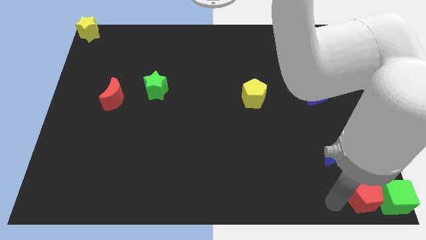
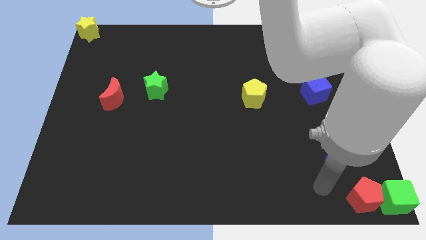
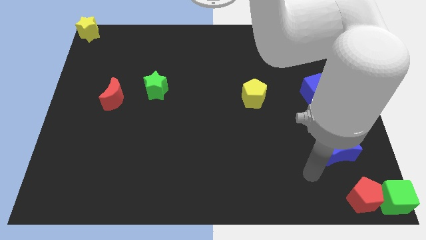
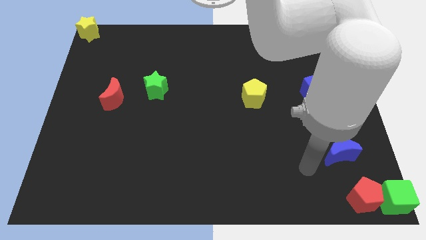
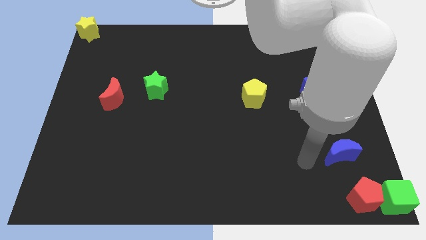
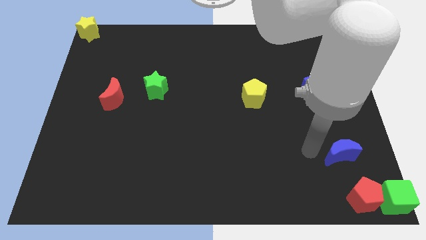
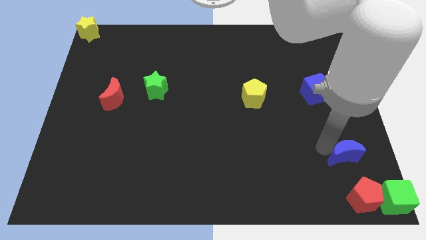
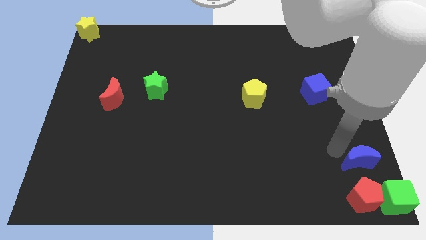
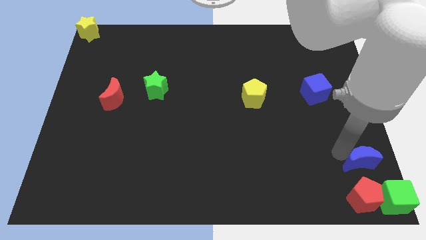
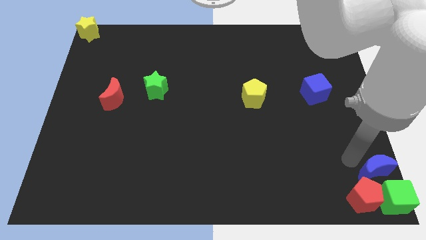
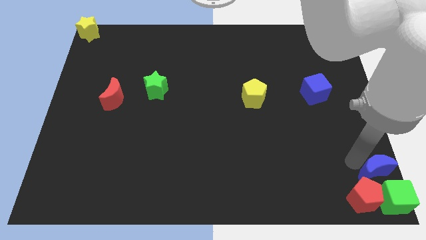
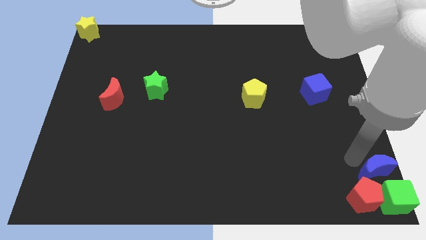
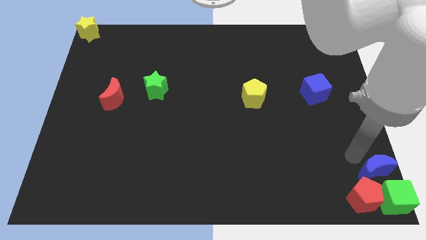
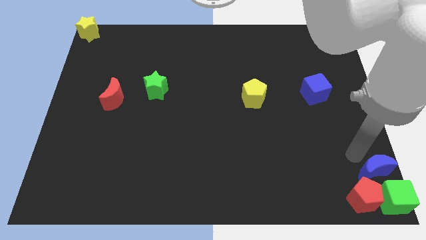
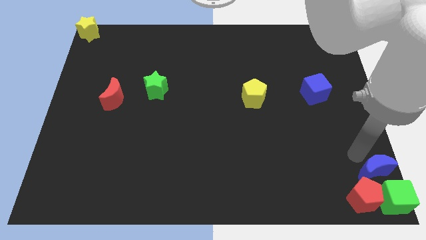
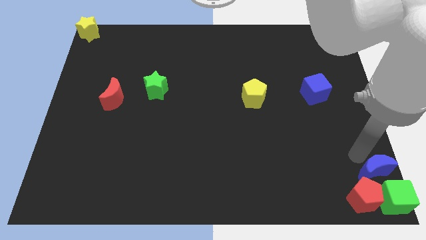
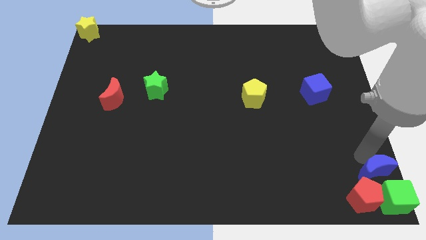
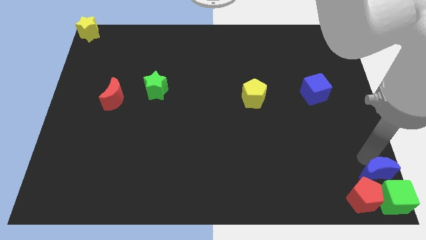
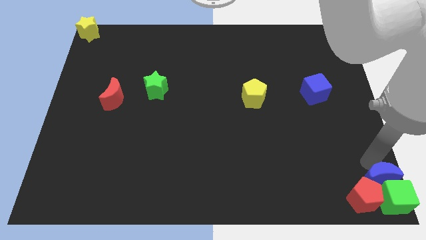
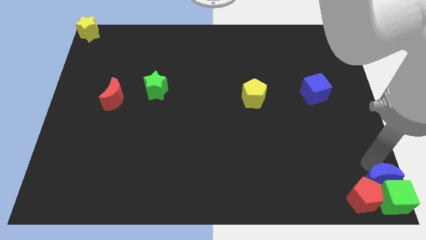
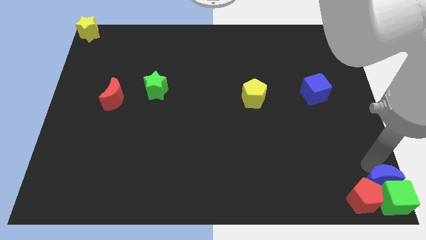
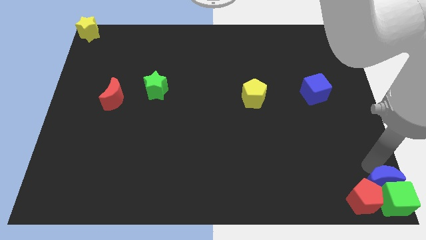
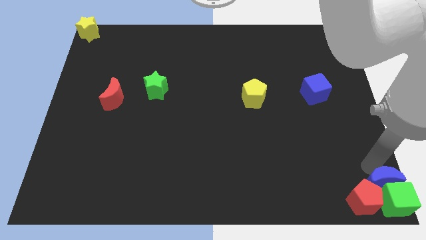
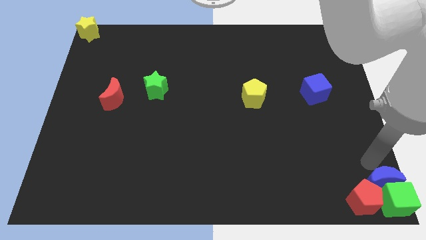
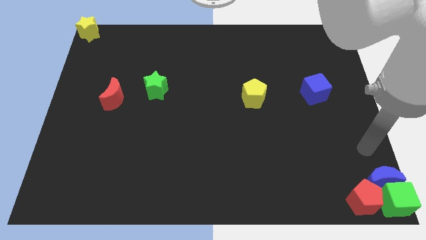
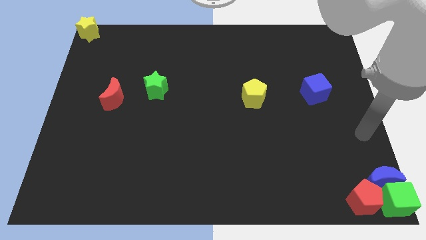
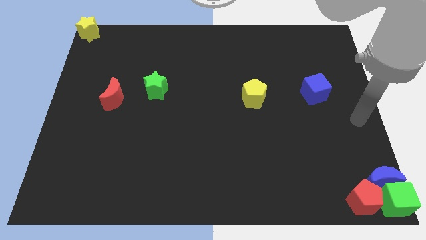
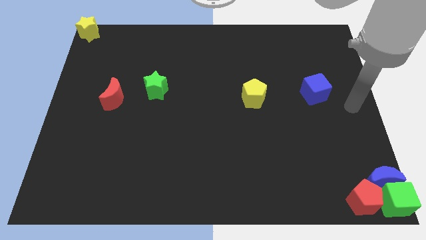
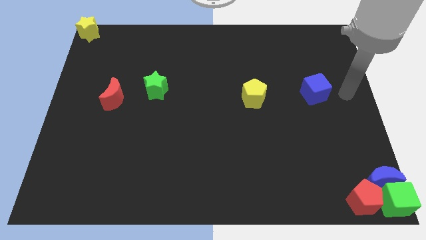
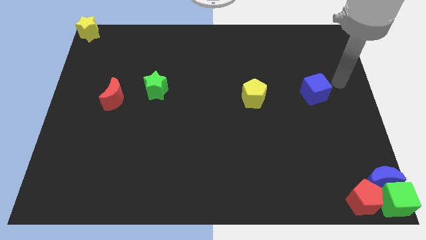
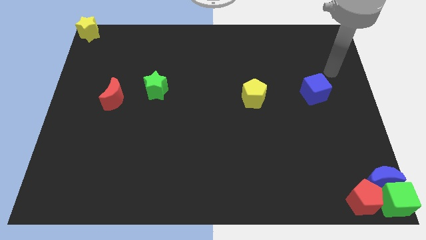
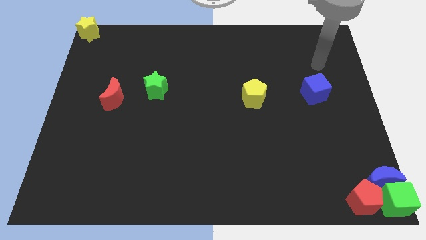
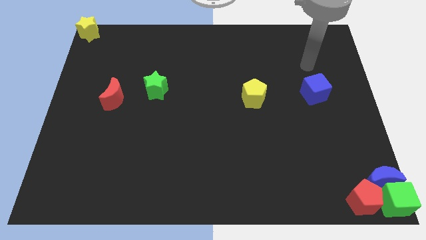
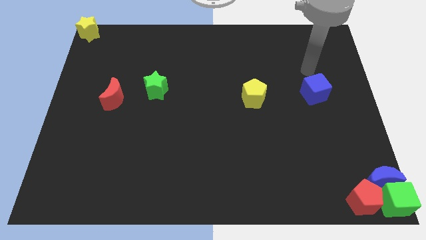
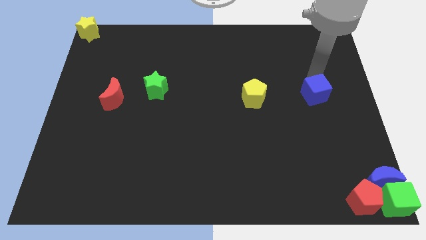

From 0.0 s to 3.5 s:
push the blue crescent into the green cube

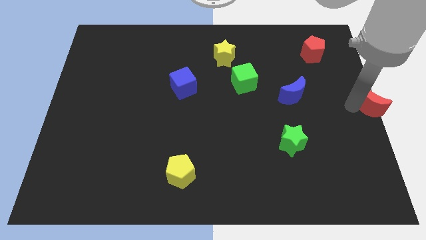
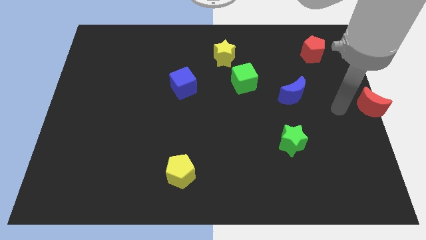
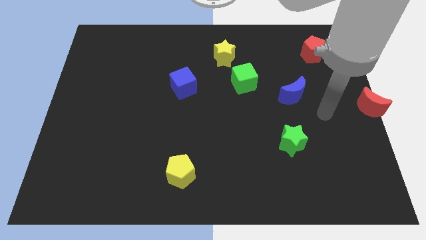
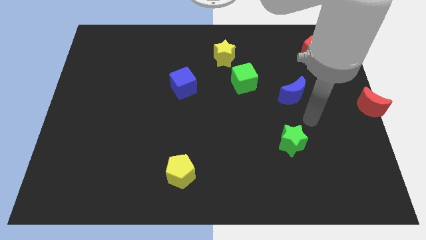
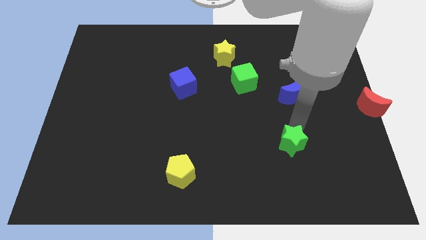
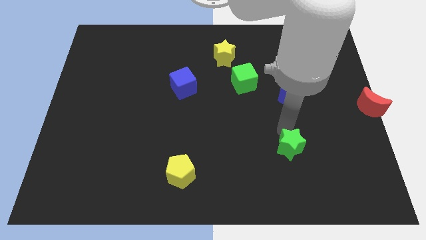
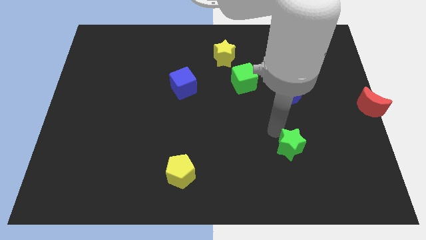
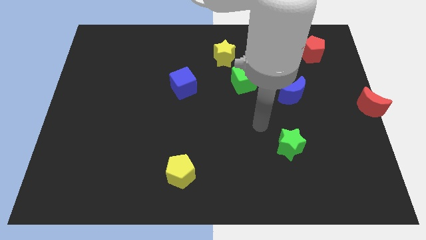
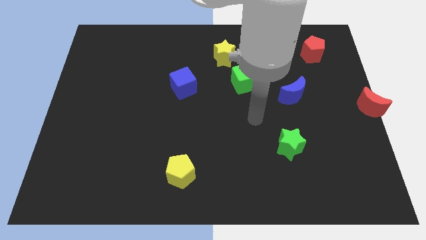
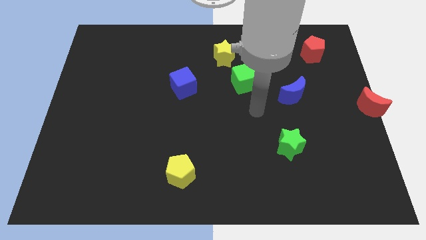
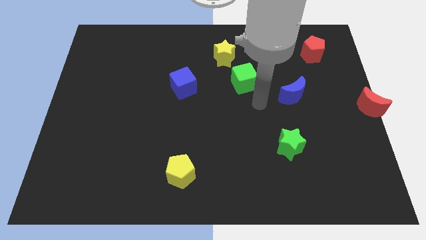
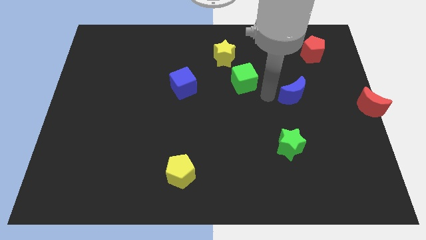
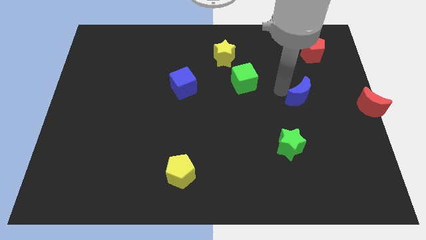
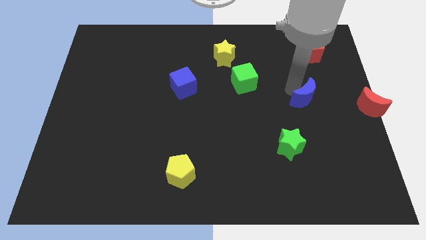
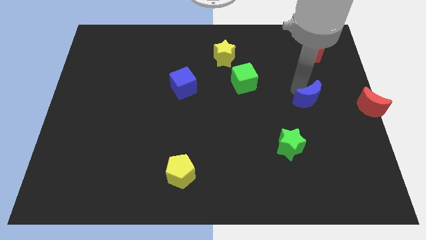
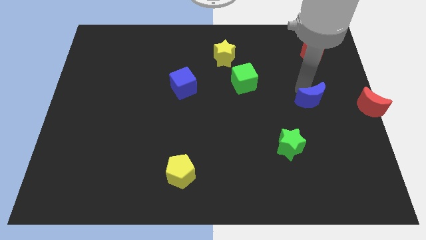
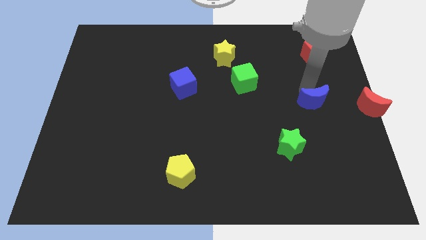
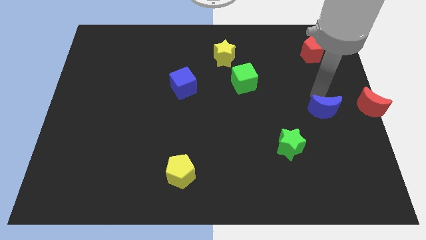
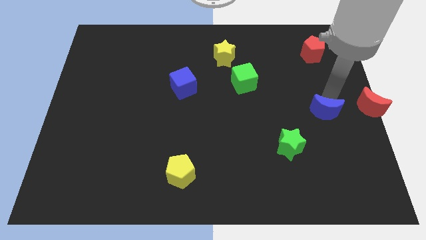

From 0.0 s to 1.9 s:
place the blue moon to the left of the red moon

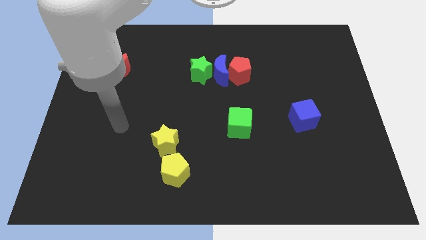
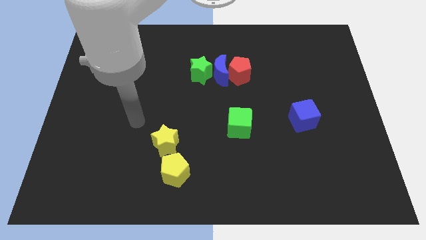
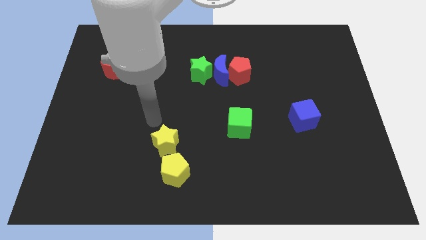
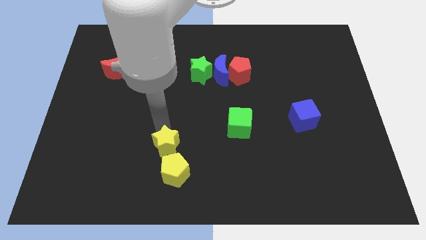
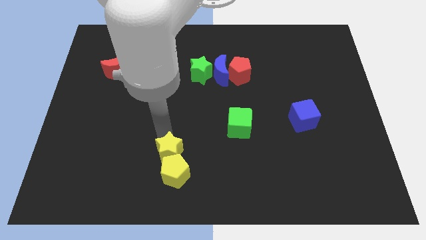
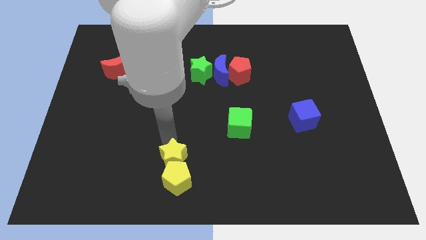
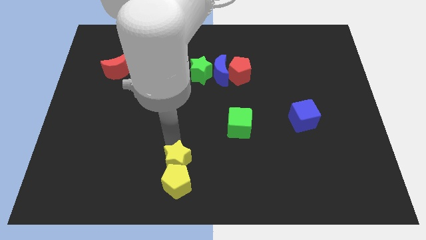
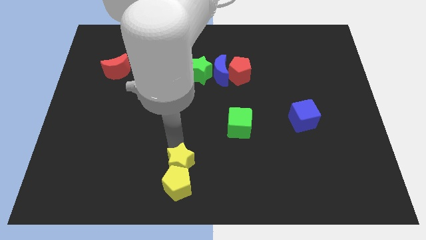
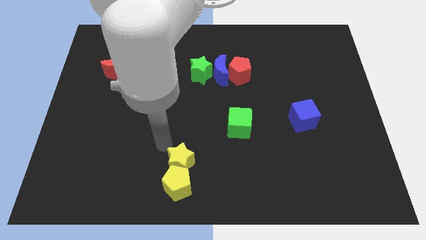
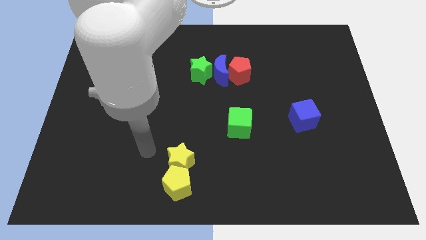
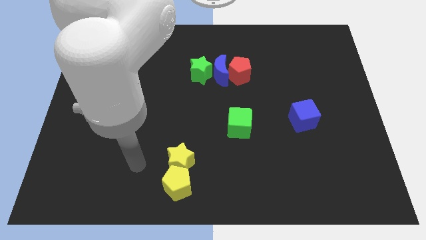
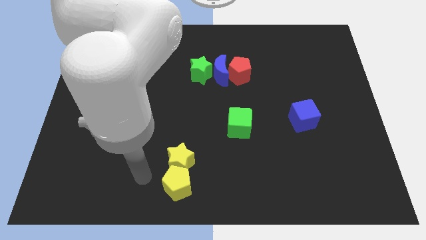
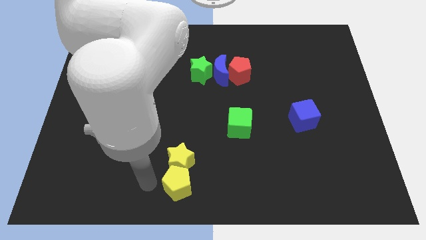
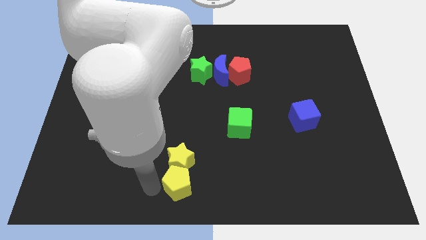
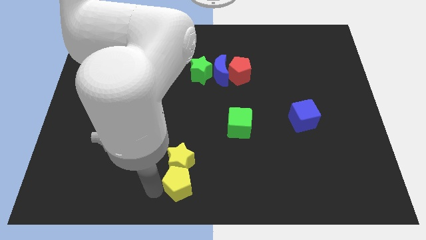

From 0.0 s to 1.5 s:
push the yellow blocks towards the bottom center

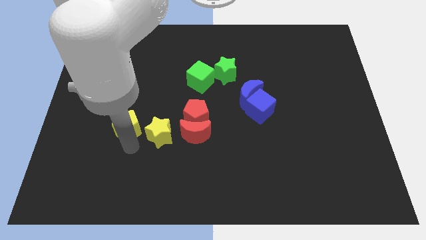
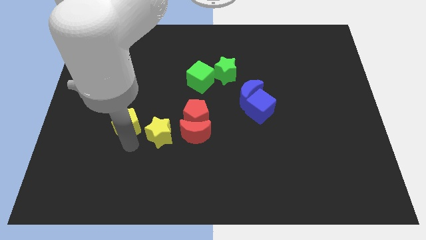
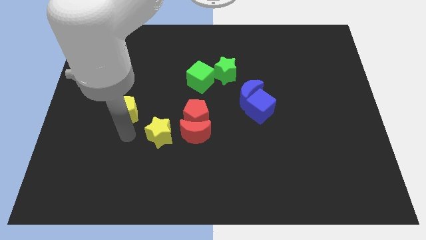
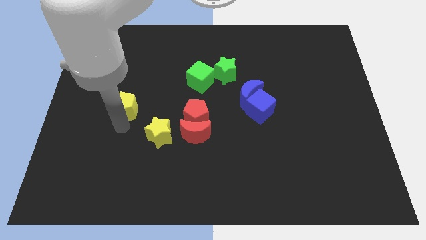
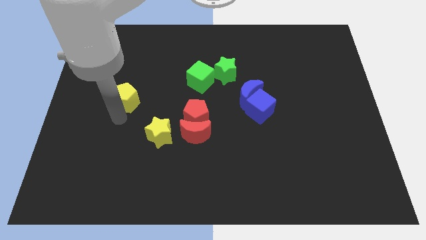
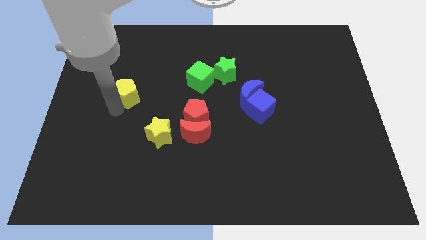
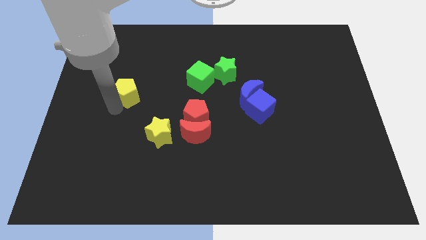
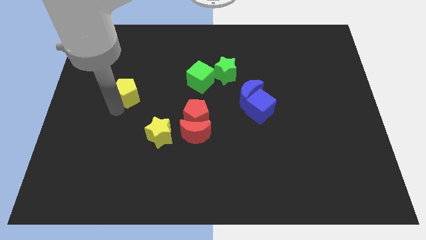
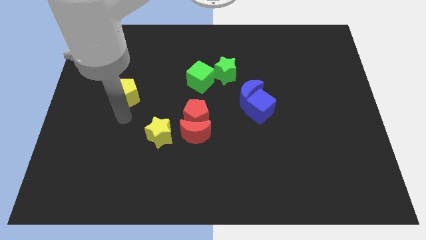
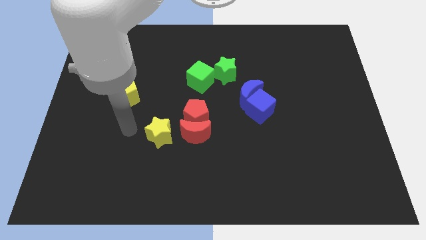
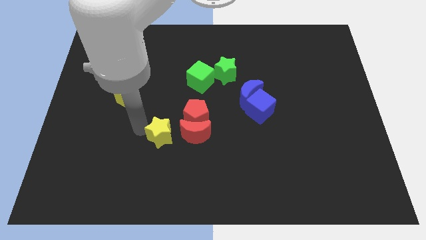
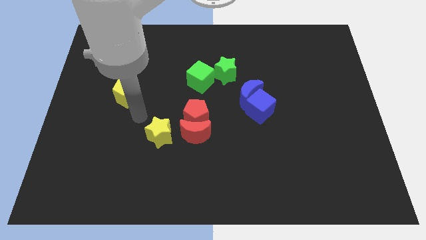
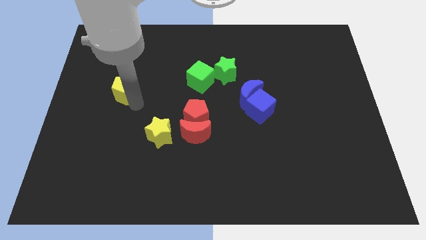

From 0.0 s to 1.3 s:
push the yellow pentagon to the top of the board

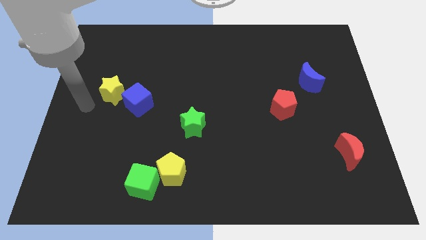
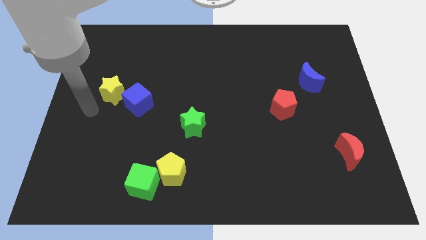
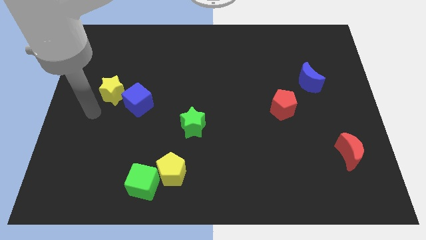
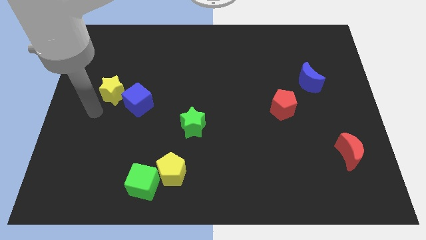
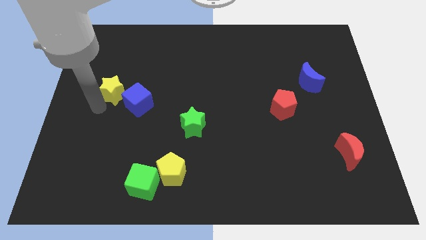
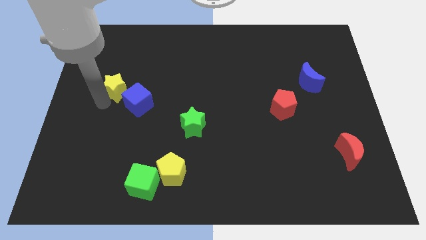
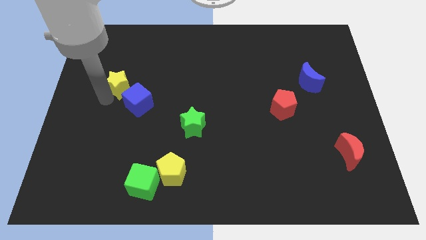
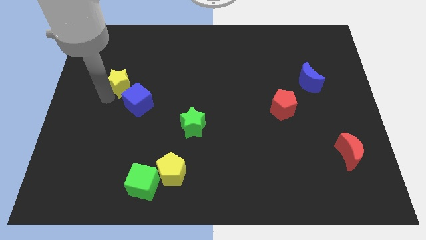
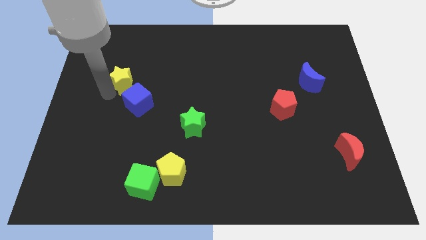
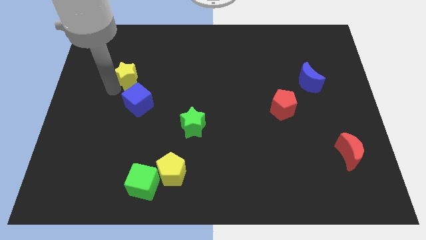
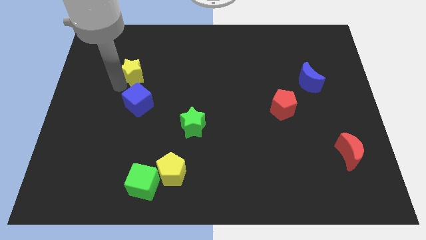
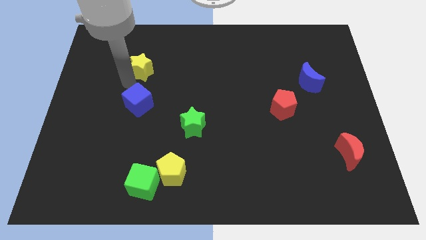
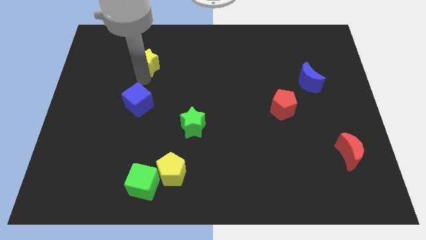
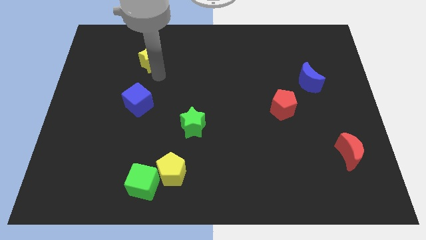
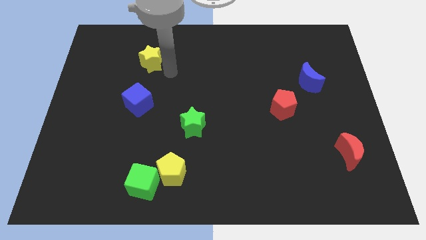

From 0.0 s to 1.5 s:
push the yellow star vertically above the blue cube
